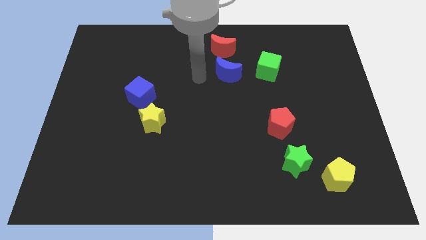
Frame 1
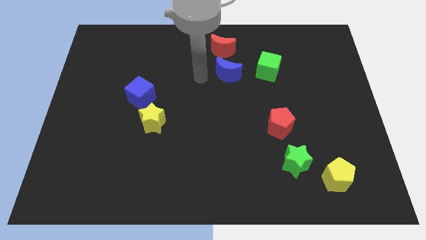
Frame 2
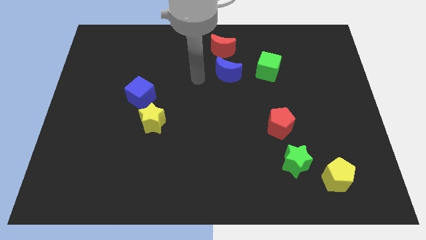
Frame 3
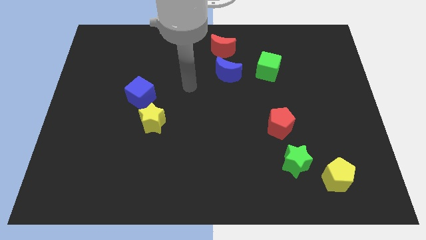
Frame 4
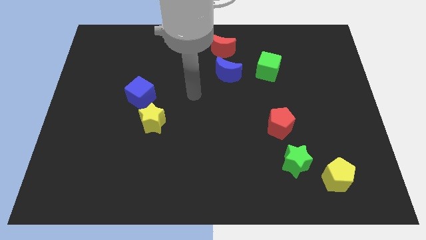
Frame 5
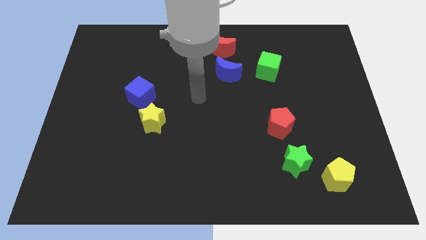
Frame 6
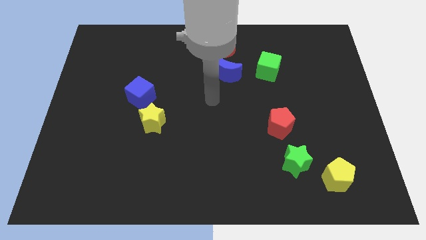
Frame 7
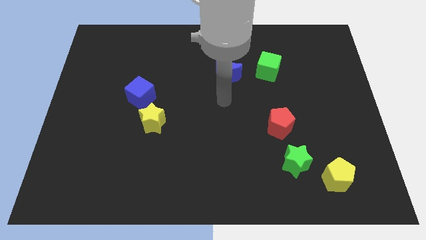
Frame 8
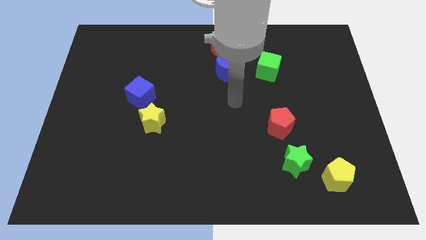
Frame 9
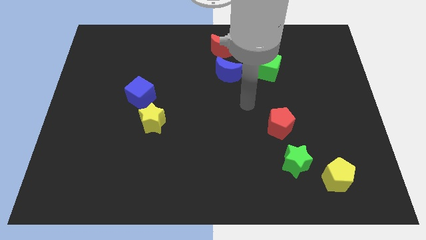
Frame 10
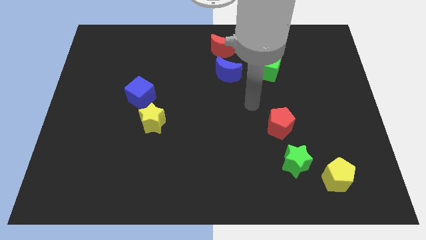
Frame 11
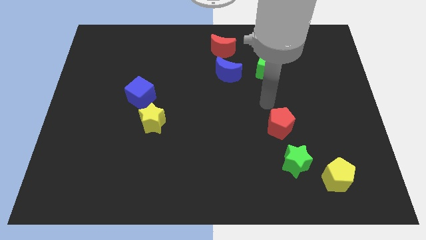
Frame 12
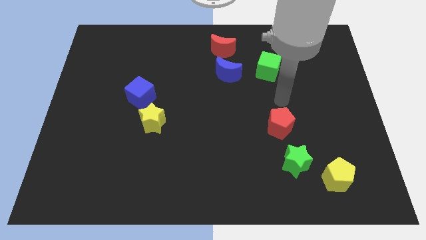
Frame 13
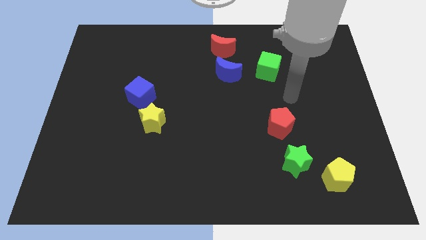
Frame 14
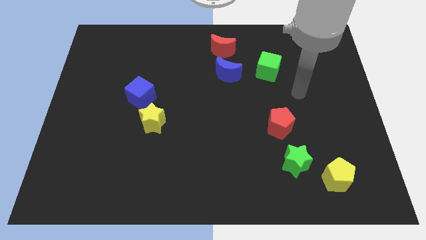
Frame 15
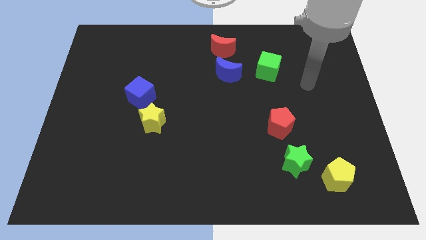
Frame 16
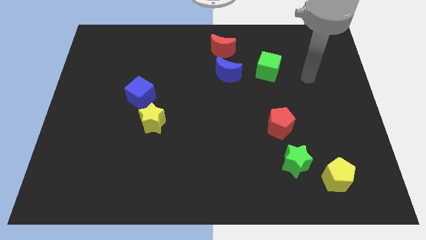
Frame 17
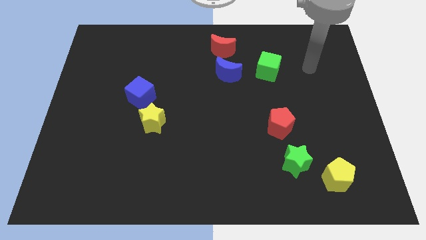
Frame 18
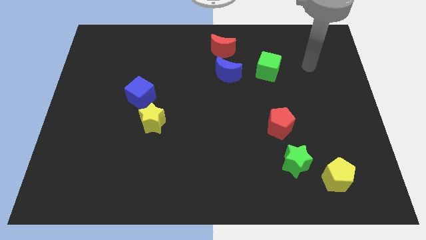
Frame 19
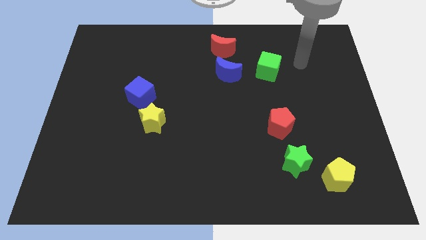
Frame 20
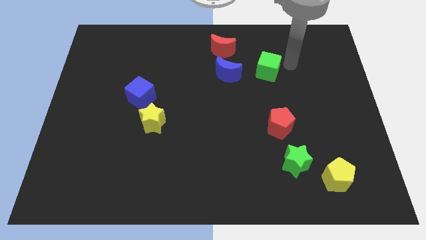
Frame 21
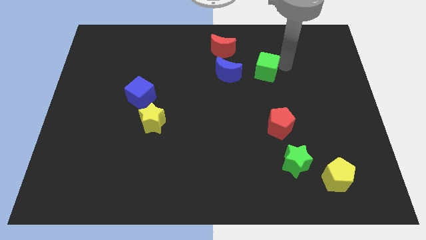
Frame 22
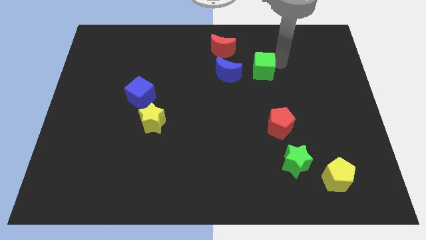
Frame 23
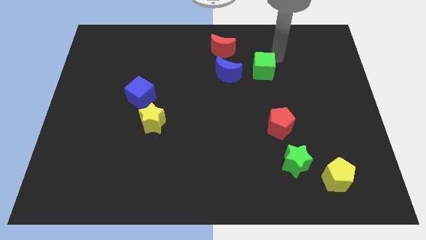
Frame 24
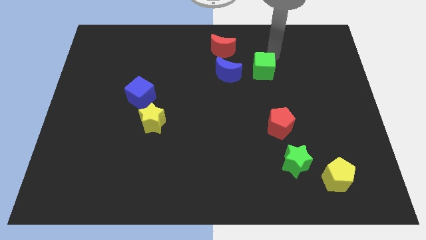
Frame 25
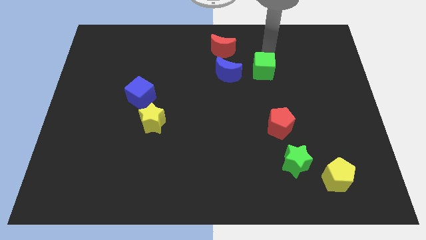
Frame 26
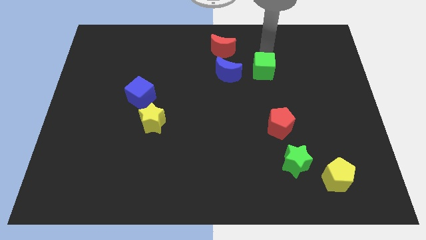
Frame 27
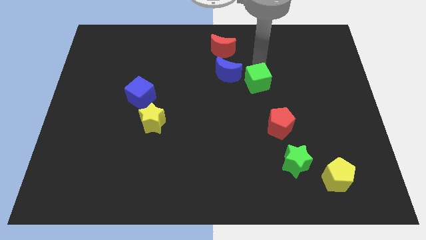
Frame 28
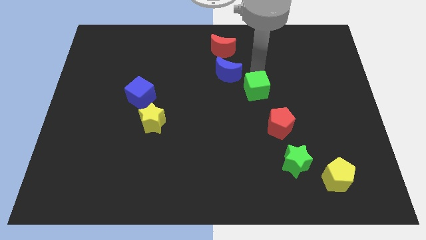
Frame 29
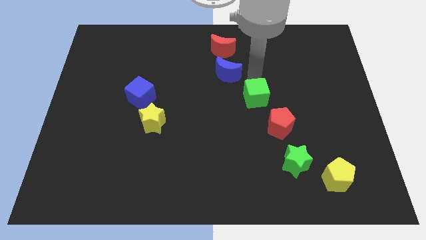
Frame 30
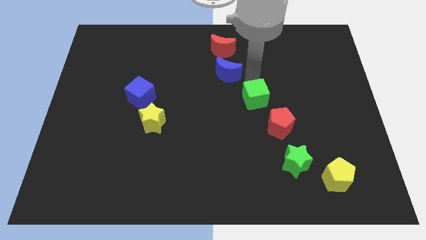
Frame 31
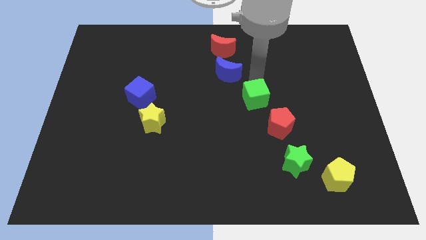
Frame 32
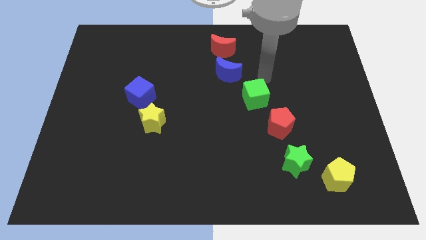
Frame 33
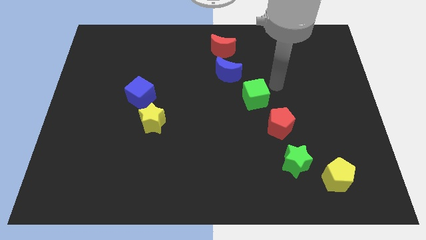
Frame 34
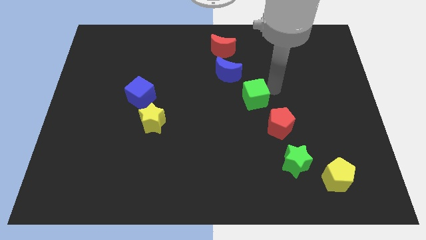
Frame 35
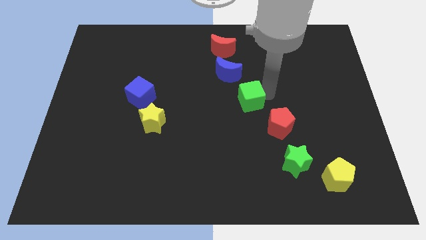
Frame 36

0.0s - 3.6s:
place the green cube beside the blue moon

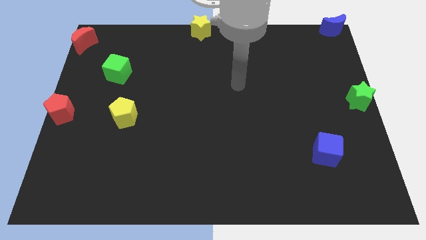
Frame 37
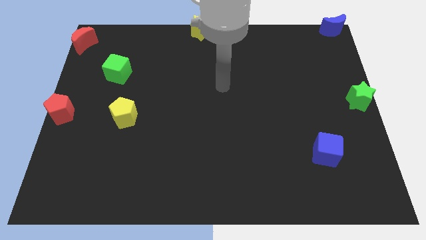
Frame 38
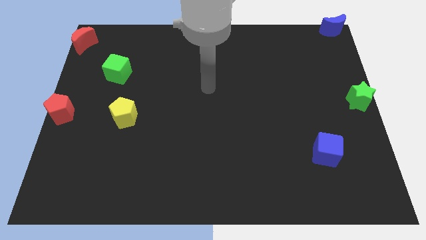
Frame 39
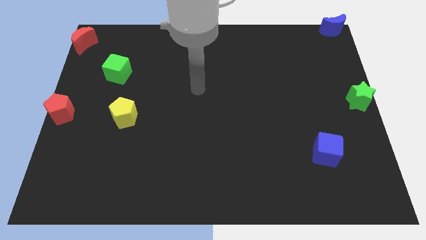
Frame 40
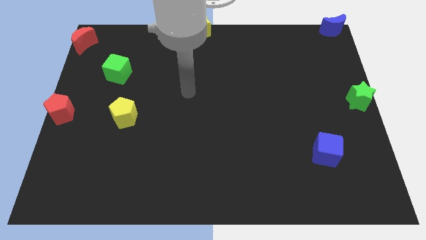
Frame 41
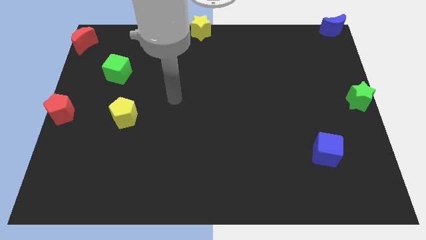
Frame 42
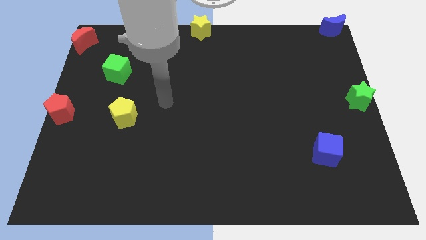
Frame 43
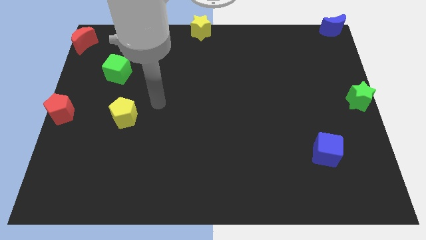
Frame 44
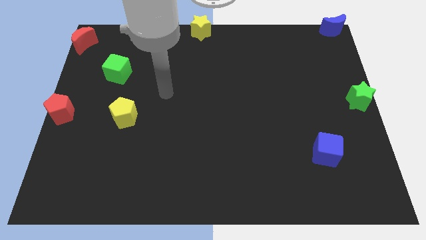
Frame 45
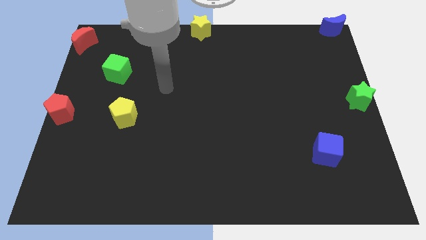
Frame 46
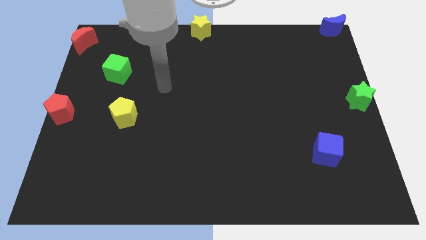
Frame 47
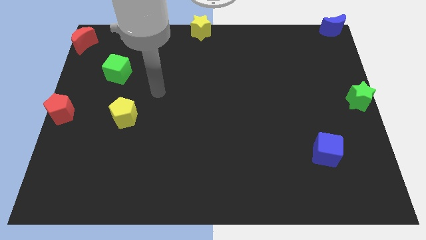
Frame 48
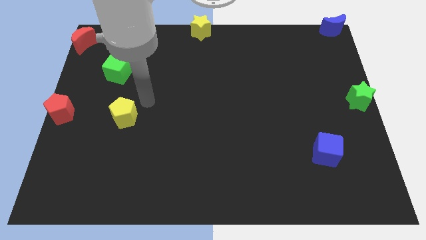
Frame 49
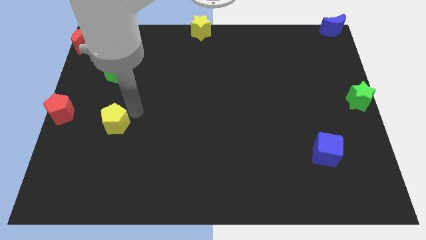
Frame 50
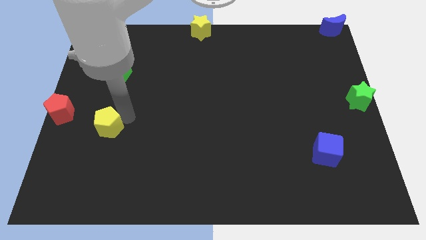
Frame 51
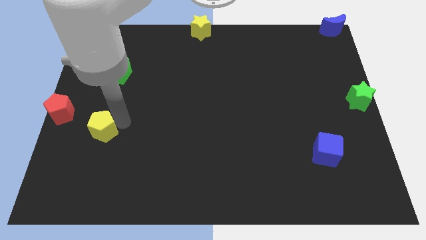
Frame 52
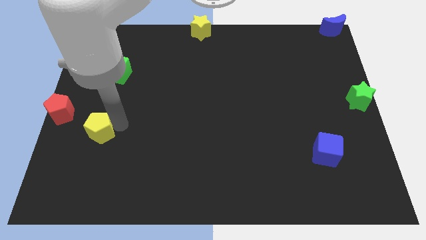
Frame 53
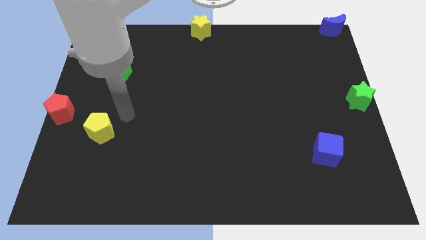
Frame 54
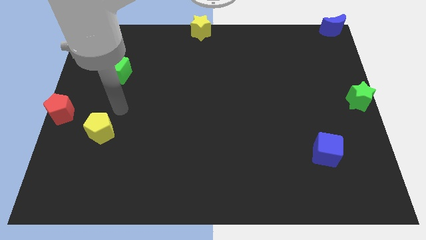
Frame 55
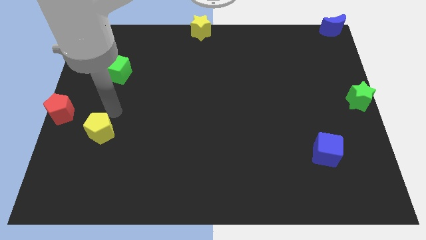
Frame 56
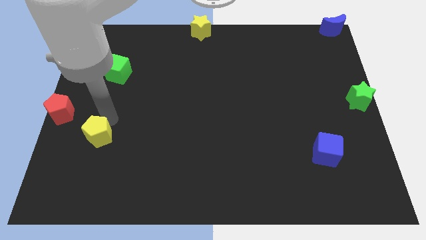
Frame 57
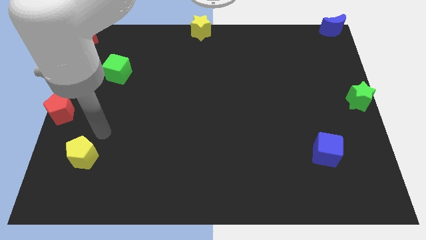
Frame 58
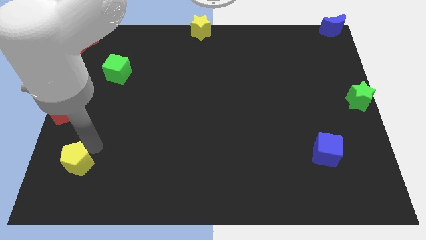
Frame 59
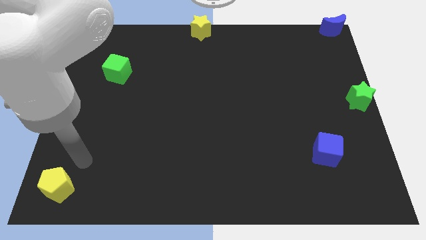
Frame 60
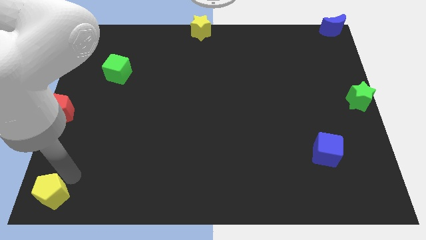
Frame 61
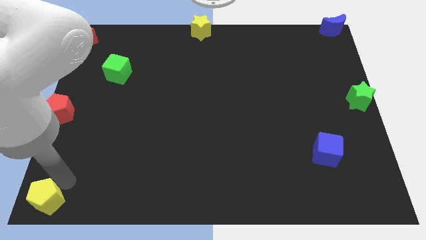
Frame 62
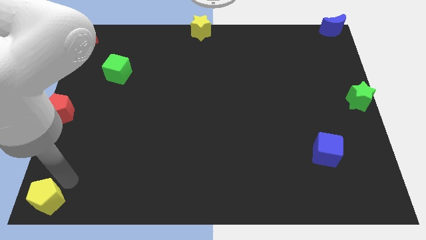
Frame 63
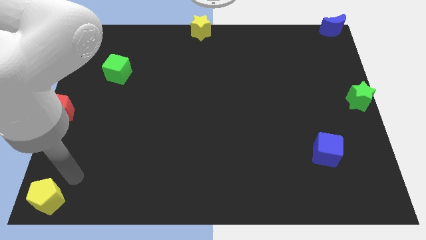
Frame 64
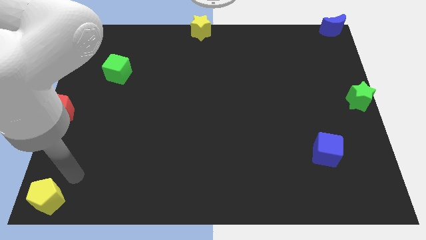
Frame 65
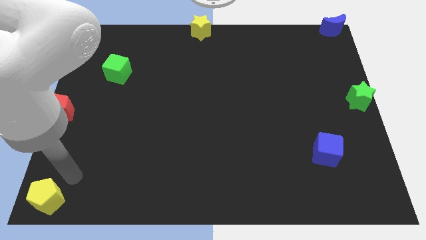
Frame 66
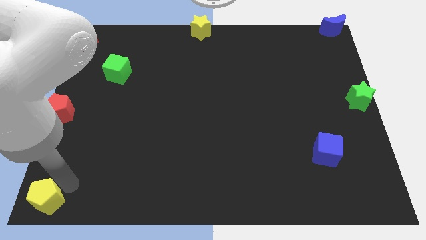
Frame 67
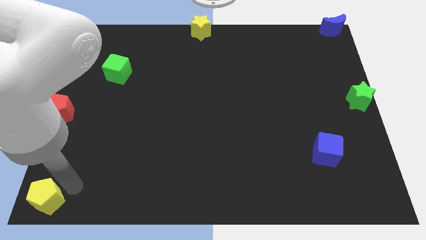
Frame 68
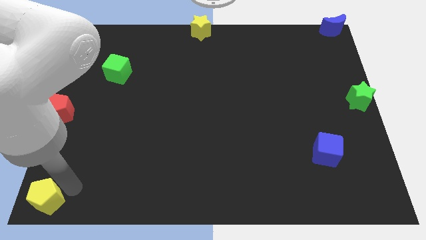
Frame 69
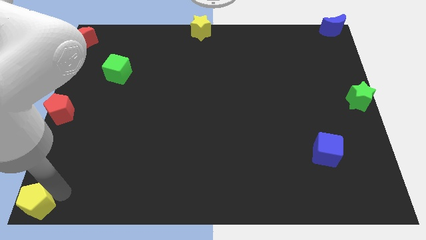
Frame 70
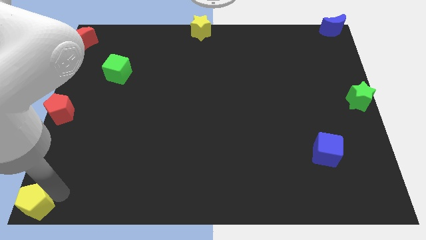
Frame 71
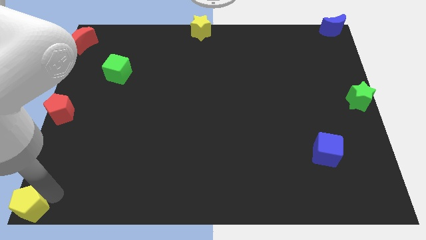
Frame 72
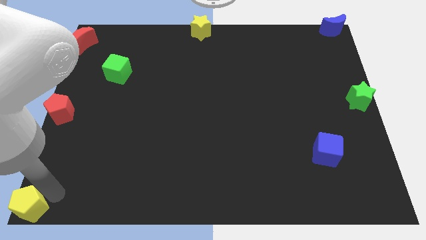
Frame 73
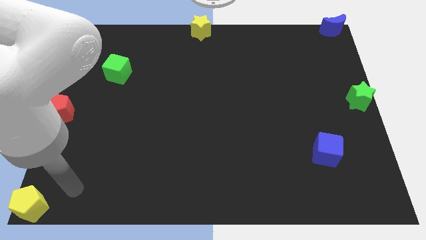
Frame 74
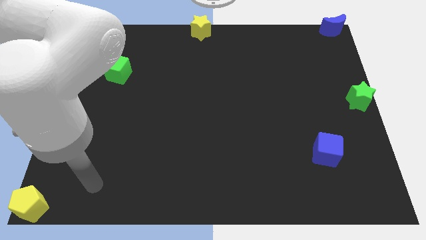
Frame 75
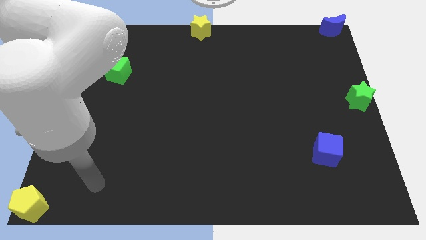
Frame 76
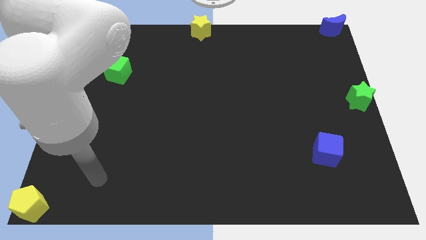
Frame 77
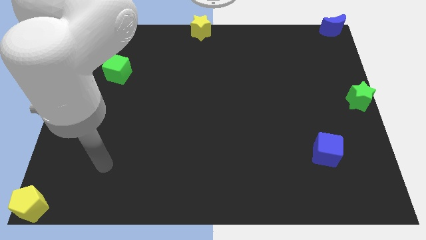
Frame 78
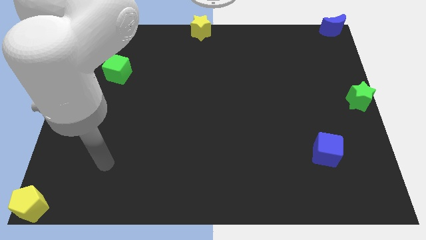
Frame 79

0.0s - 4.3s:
move the yellow pentagon to the bottom left corner

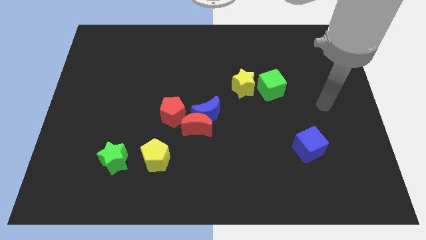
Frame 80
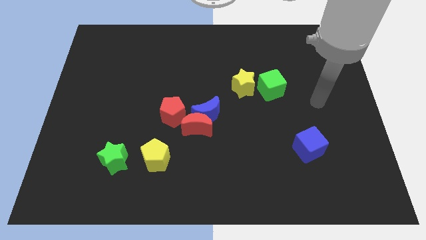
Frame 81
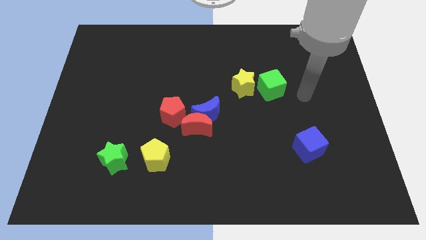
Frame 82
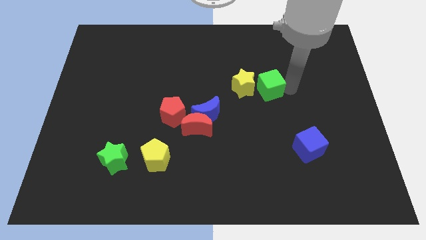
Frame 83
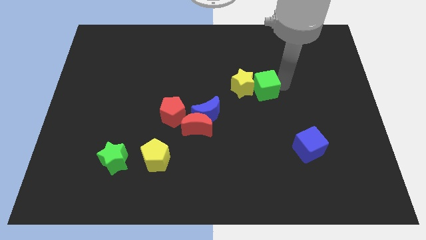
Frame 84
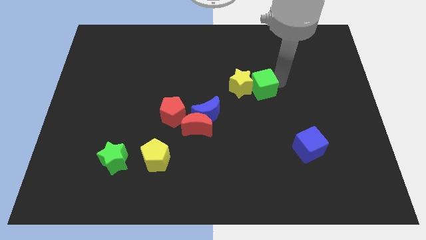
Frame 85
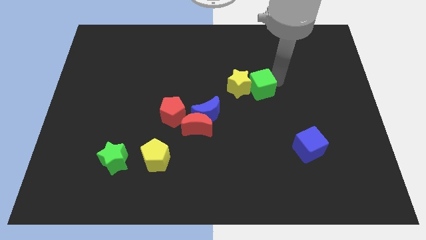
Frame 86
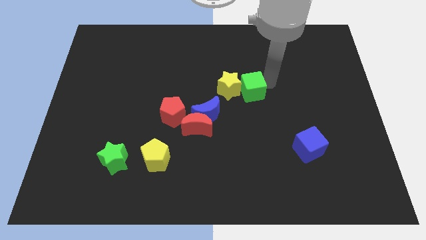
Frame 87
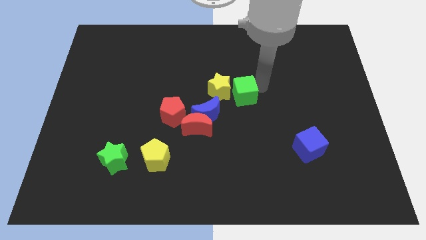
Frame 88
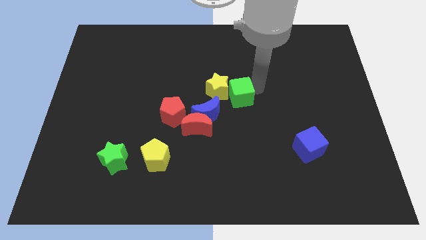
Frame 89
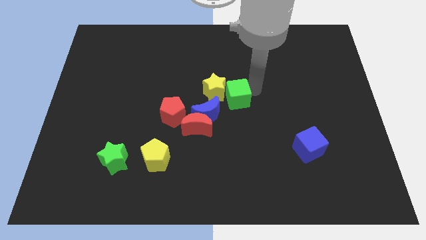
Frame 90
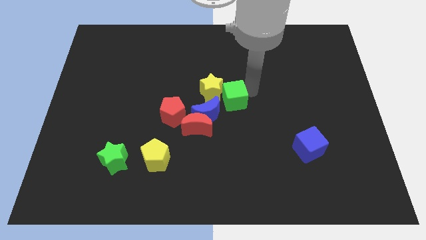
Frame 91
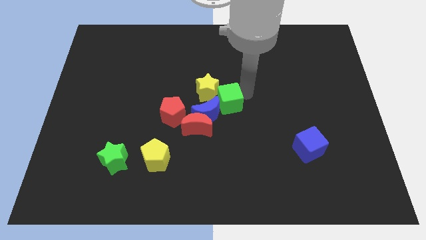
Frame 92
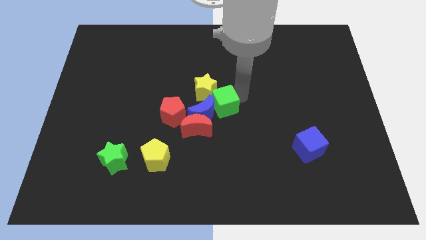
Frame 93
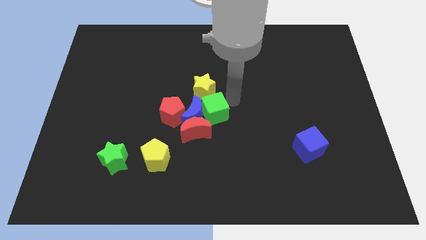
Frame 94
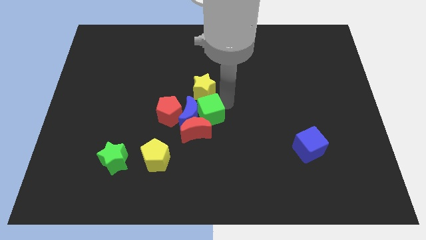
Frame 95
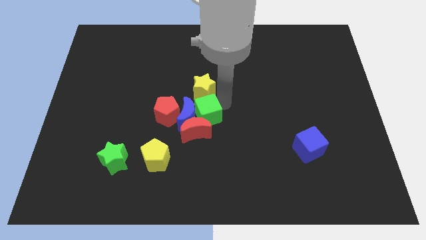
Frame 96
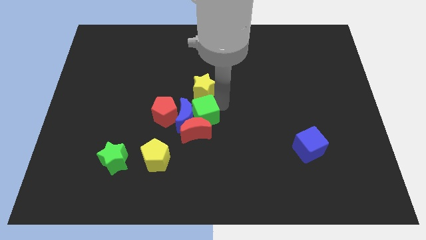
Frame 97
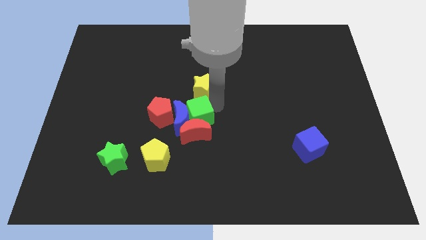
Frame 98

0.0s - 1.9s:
push the green cube into blue moon
